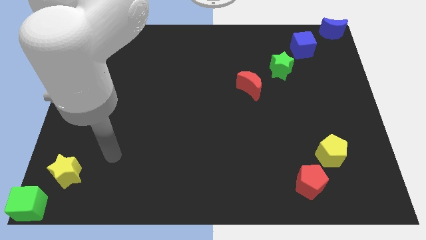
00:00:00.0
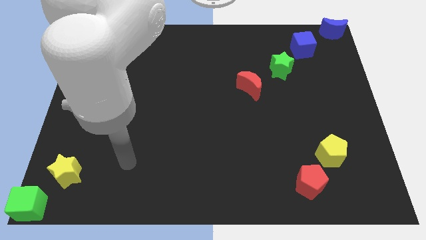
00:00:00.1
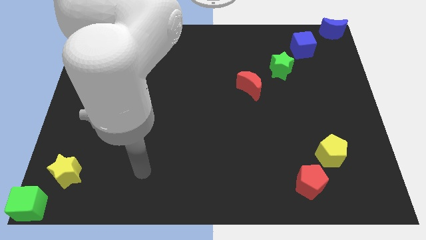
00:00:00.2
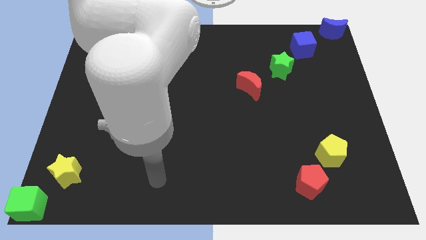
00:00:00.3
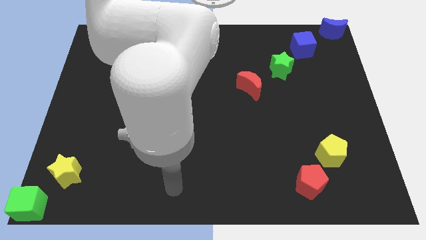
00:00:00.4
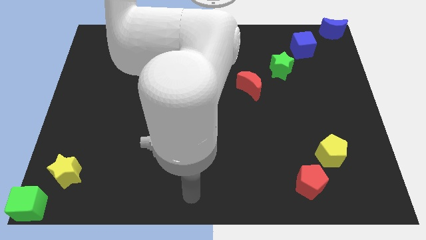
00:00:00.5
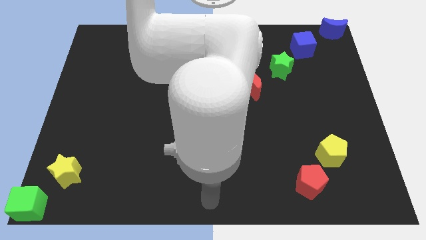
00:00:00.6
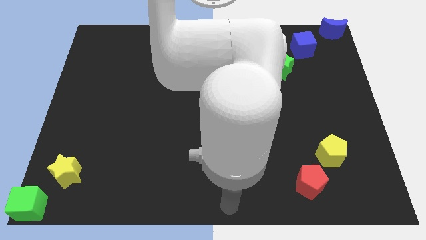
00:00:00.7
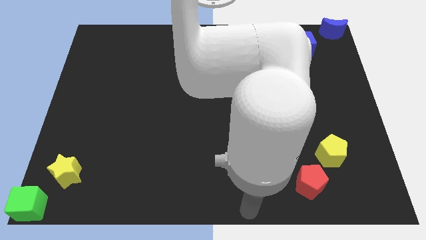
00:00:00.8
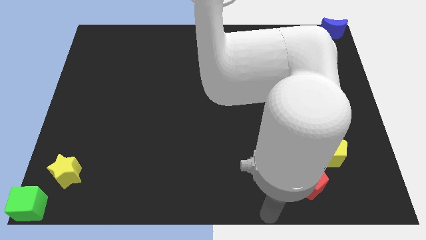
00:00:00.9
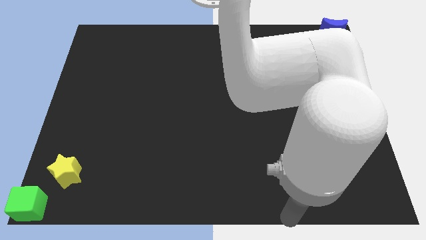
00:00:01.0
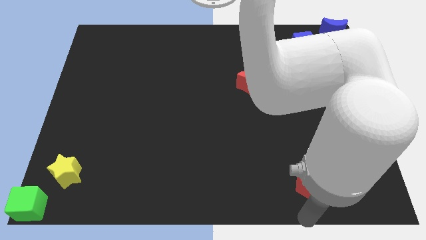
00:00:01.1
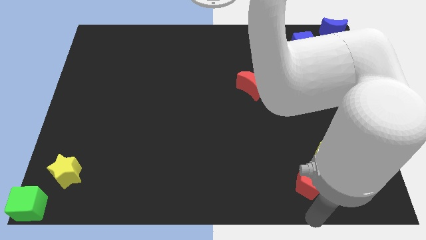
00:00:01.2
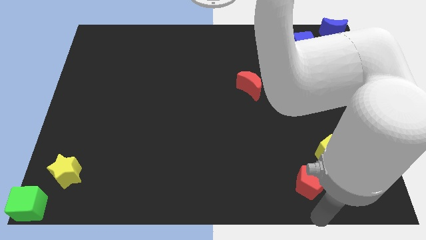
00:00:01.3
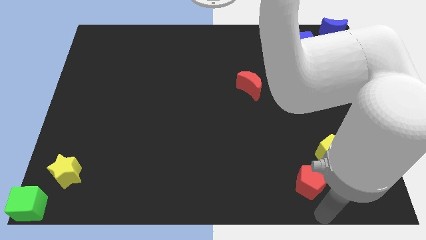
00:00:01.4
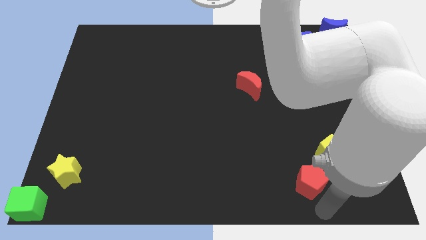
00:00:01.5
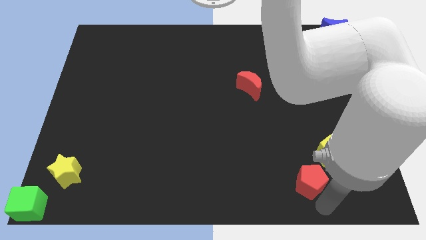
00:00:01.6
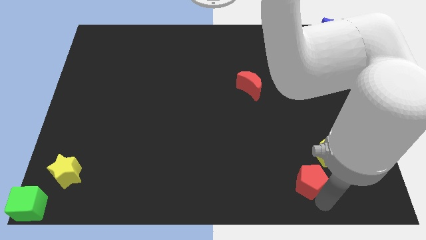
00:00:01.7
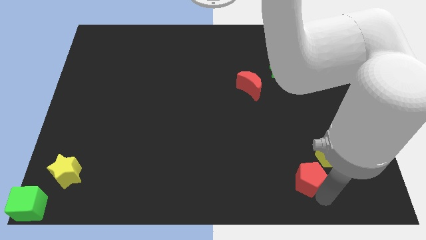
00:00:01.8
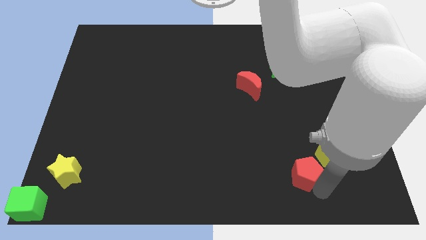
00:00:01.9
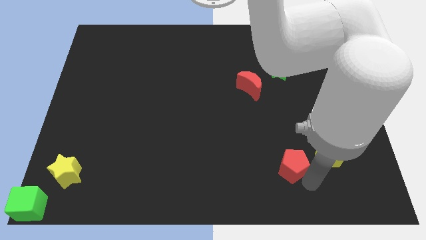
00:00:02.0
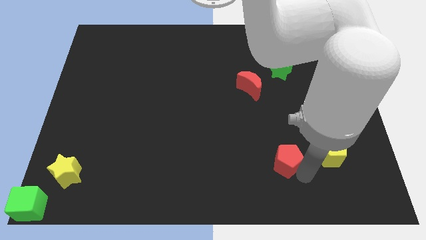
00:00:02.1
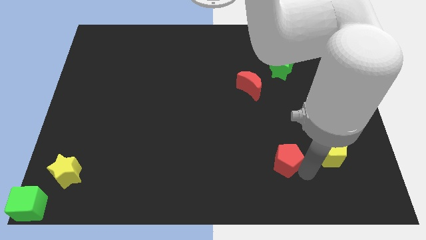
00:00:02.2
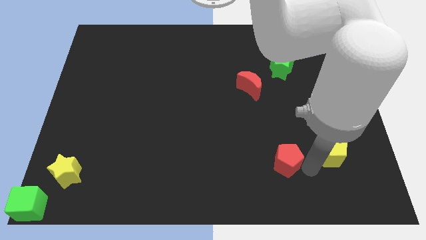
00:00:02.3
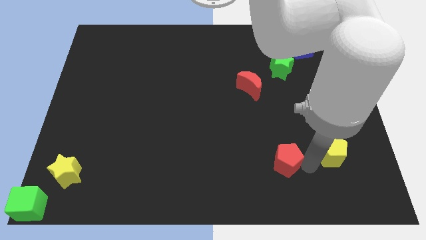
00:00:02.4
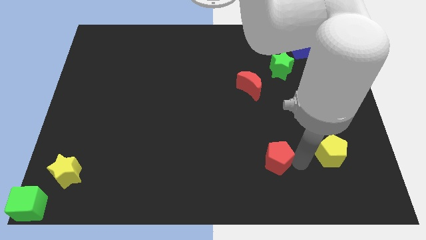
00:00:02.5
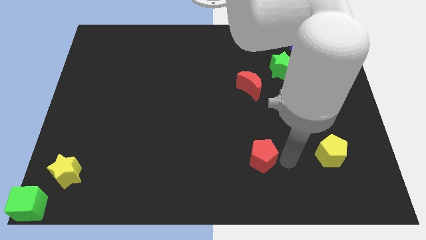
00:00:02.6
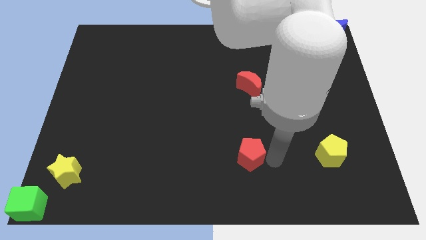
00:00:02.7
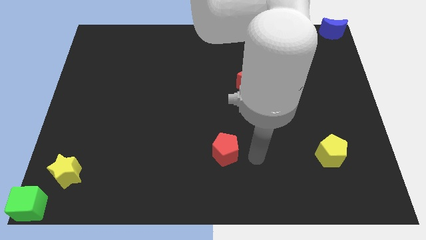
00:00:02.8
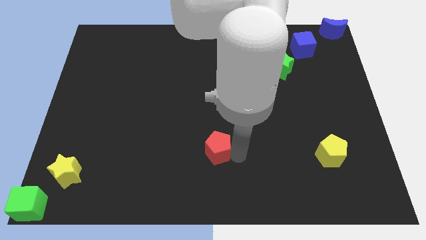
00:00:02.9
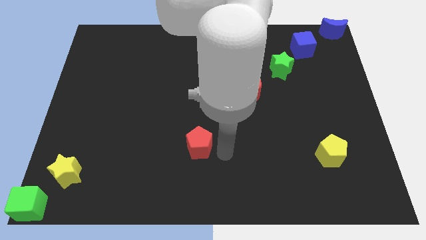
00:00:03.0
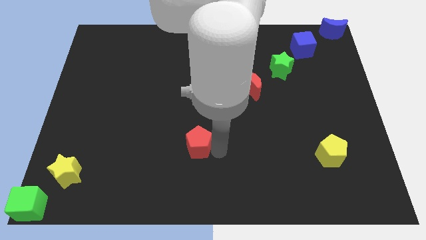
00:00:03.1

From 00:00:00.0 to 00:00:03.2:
move the red pentagon away from the yellow pentagon

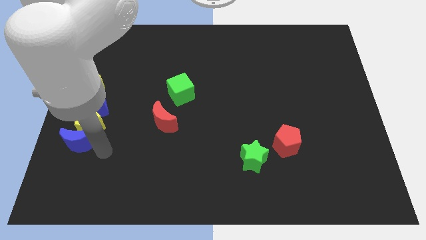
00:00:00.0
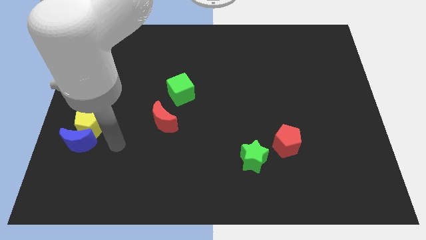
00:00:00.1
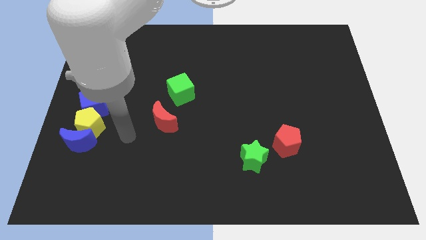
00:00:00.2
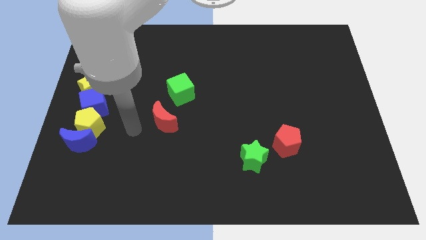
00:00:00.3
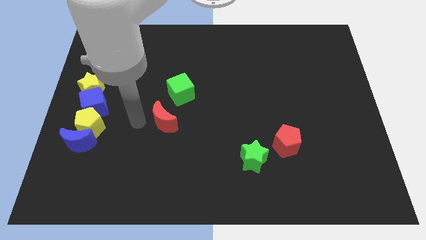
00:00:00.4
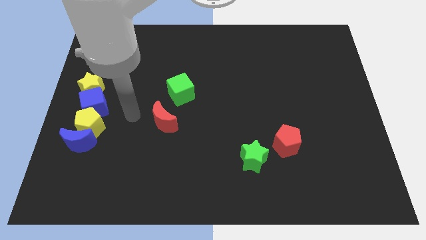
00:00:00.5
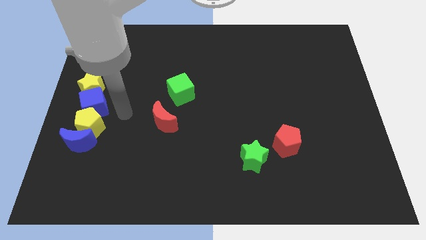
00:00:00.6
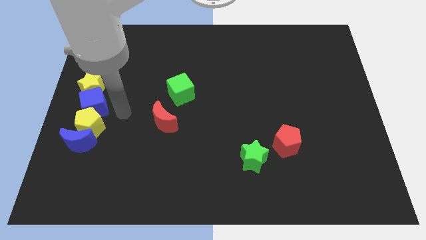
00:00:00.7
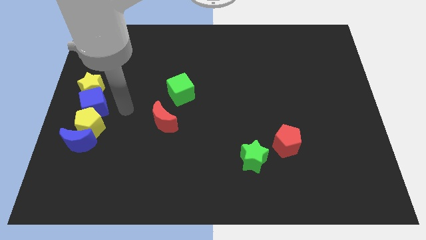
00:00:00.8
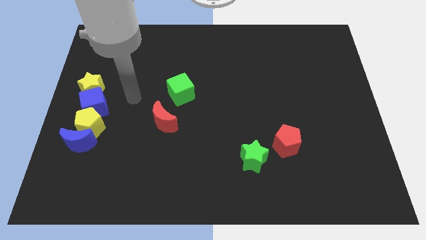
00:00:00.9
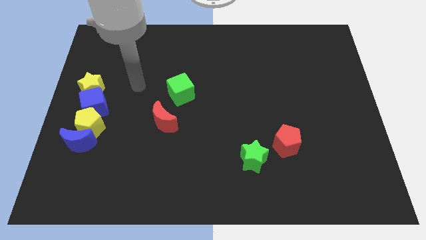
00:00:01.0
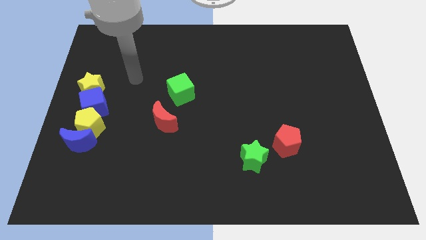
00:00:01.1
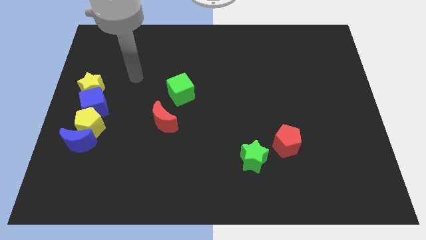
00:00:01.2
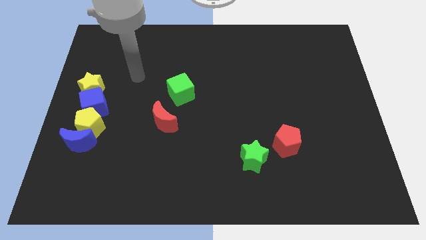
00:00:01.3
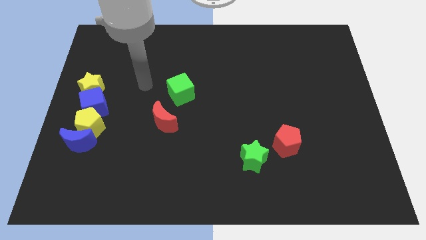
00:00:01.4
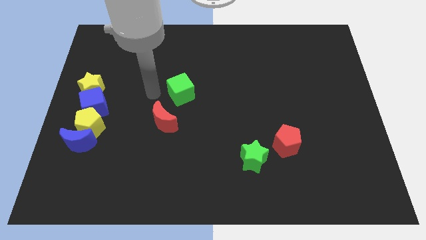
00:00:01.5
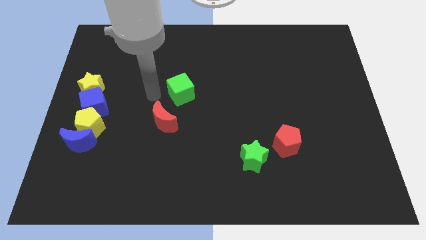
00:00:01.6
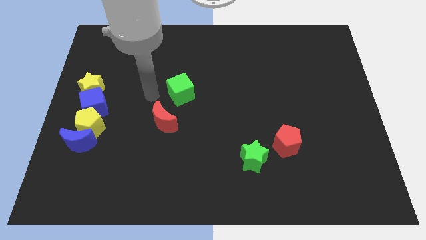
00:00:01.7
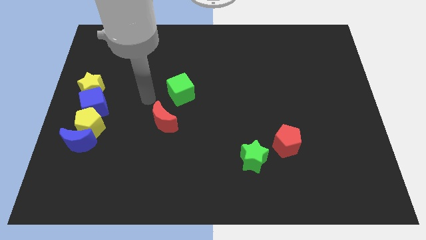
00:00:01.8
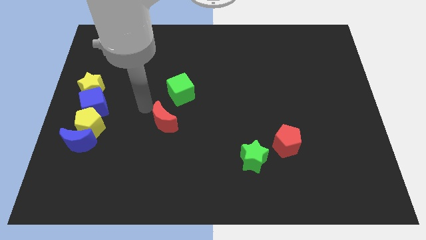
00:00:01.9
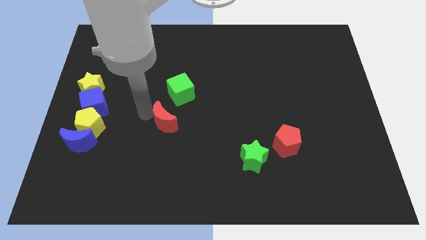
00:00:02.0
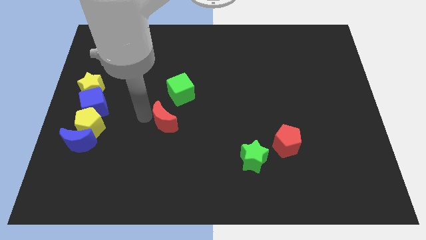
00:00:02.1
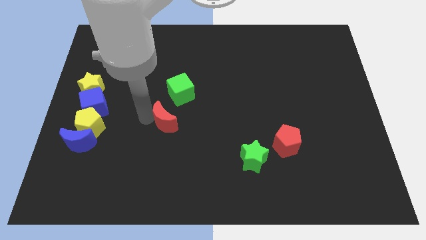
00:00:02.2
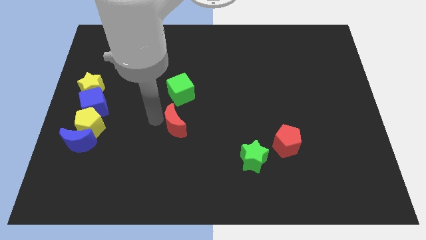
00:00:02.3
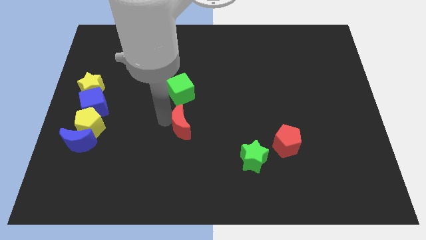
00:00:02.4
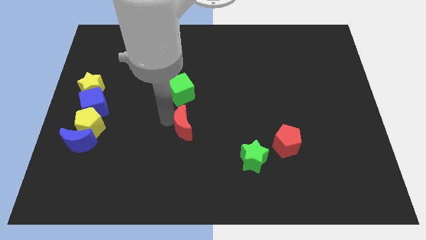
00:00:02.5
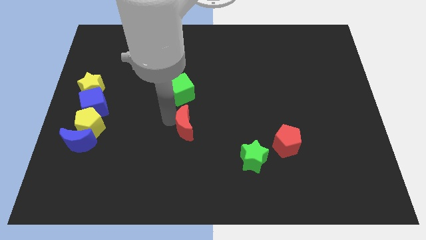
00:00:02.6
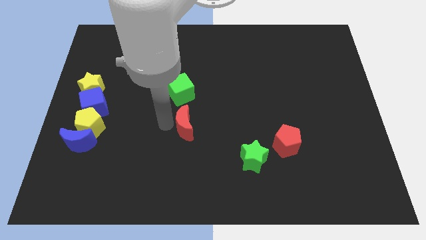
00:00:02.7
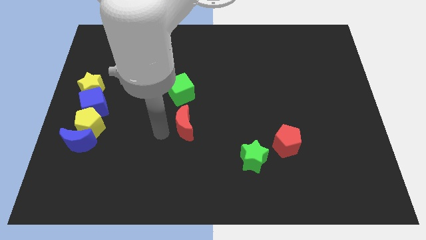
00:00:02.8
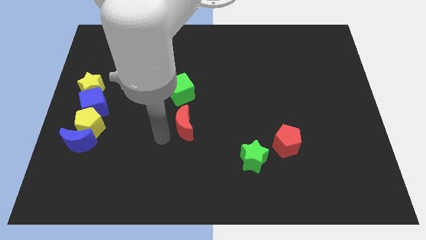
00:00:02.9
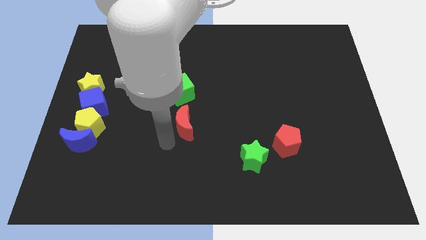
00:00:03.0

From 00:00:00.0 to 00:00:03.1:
slide the red crescent slightly to the right

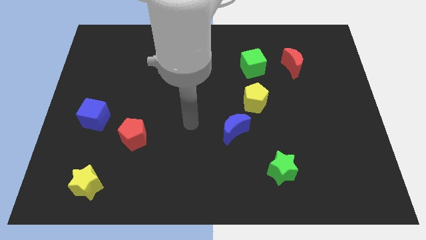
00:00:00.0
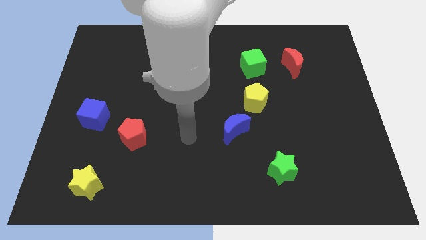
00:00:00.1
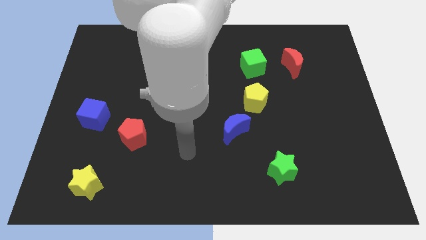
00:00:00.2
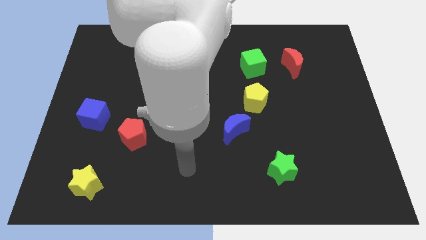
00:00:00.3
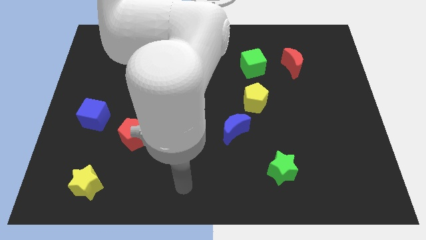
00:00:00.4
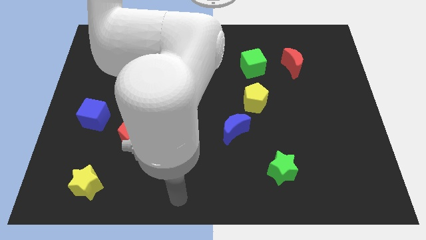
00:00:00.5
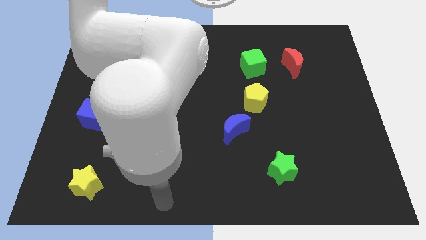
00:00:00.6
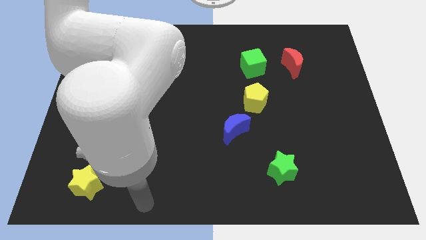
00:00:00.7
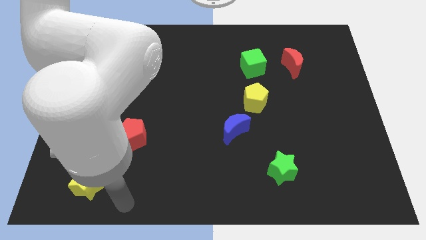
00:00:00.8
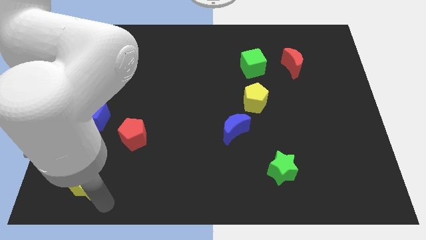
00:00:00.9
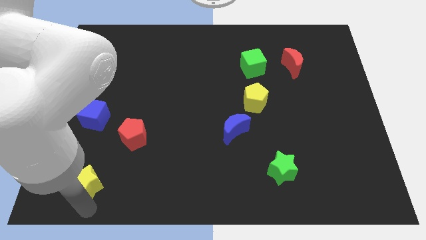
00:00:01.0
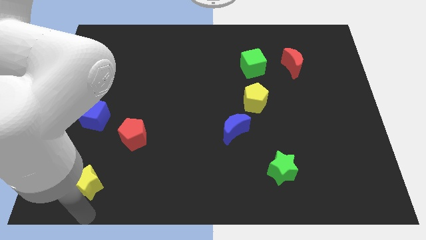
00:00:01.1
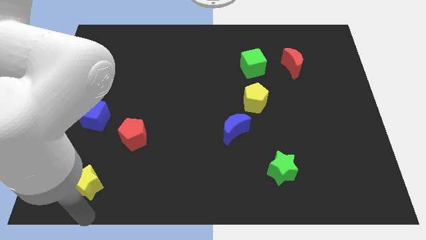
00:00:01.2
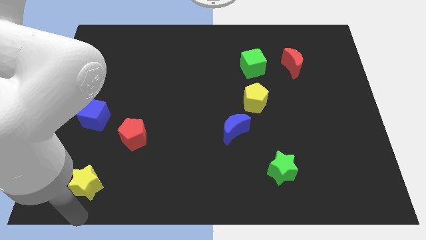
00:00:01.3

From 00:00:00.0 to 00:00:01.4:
move your arm below the yellow star

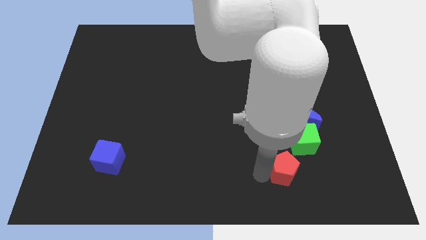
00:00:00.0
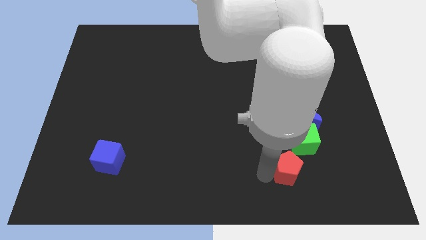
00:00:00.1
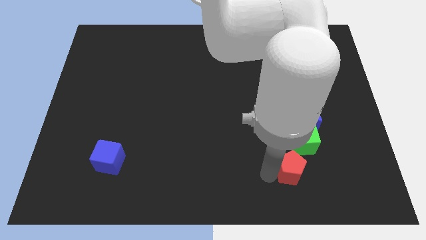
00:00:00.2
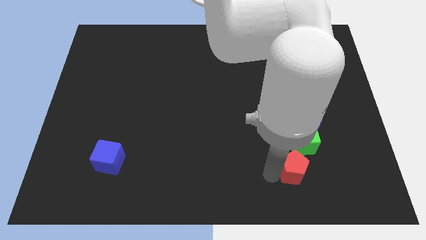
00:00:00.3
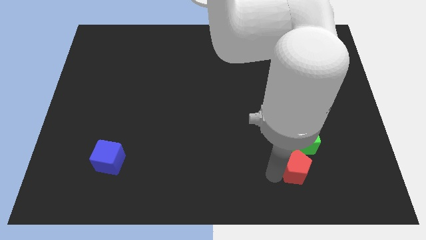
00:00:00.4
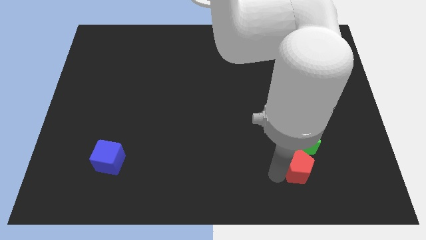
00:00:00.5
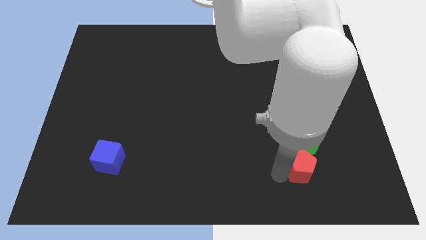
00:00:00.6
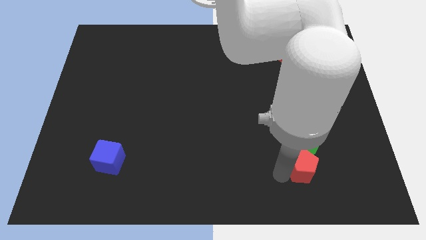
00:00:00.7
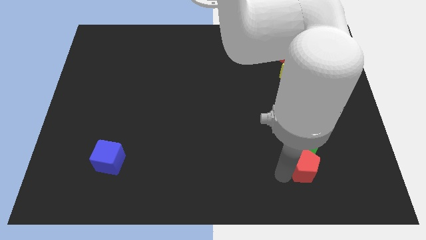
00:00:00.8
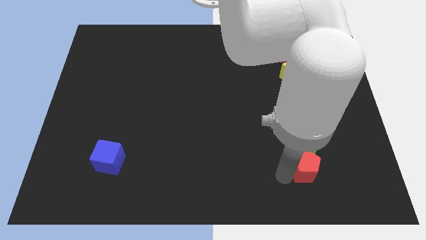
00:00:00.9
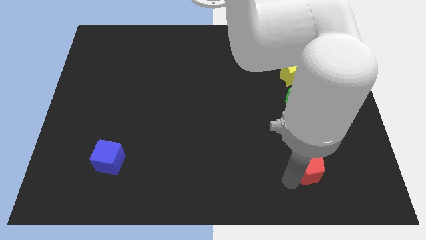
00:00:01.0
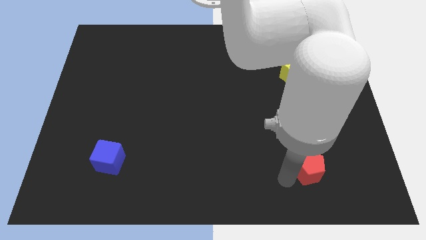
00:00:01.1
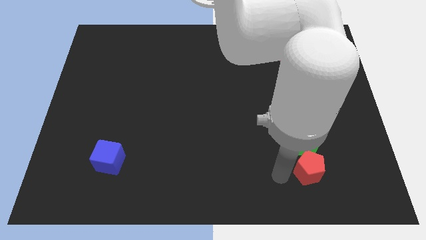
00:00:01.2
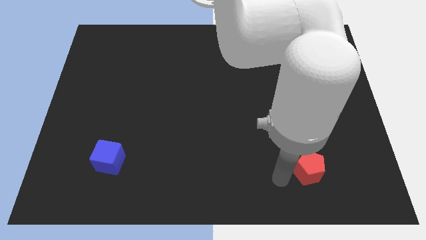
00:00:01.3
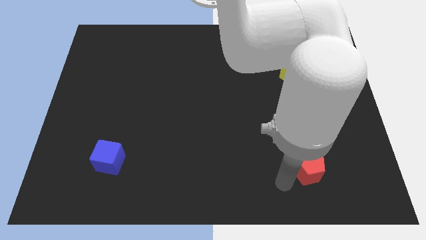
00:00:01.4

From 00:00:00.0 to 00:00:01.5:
push red pentagon below green cube
